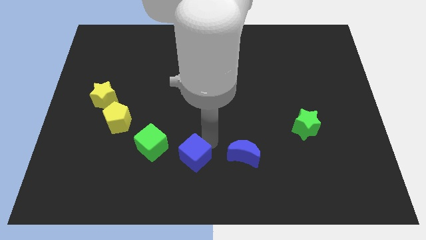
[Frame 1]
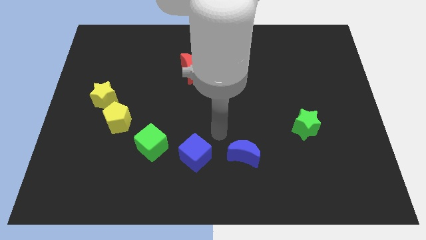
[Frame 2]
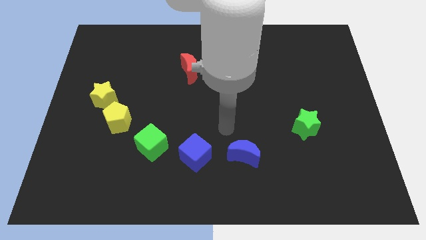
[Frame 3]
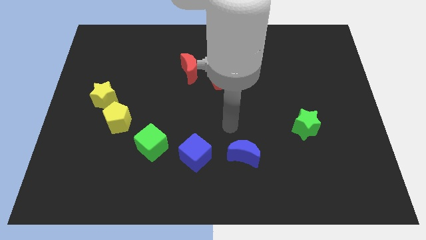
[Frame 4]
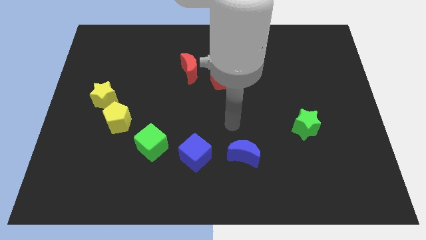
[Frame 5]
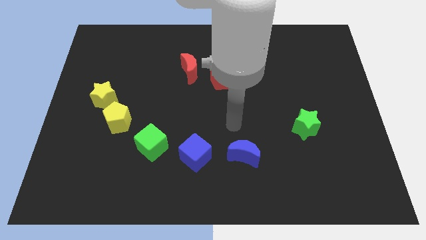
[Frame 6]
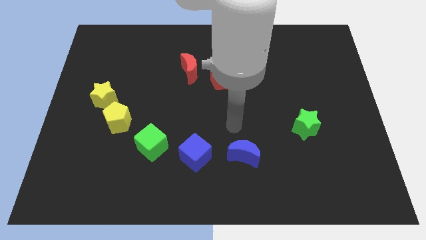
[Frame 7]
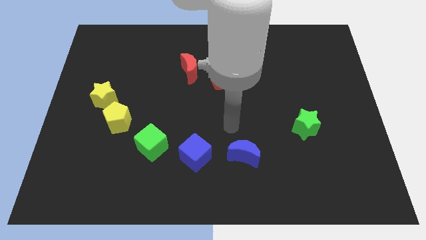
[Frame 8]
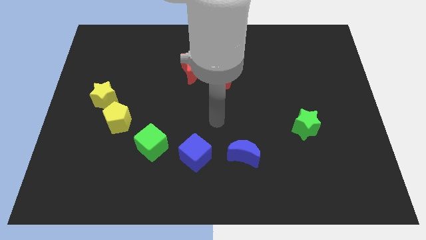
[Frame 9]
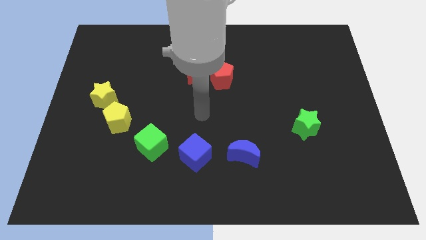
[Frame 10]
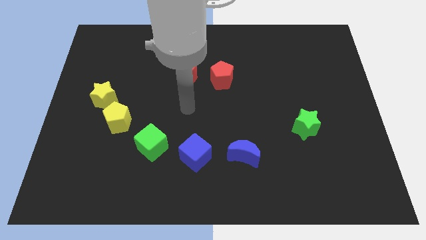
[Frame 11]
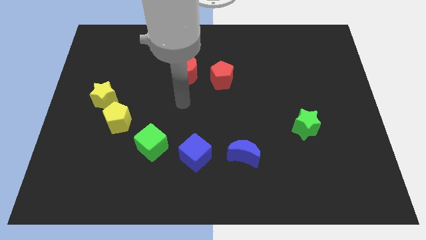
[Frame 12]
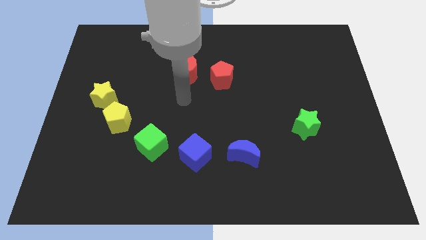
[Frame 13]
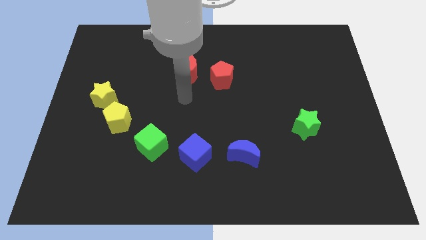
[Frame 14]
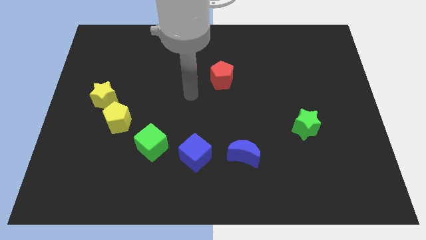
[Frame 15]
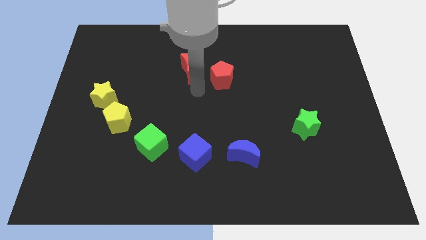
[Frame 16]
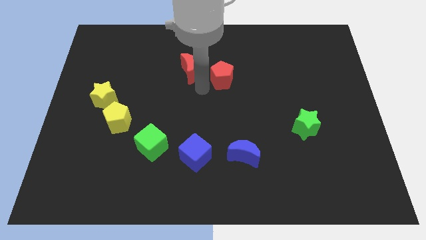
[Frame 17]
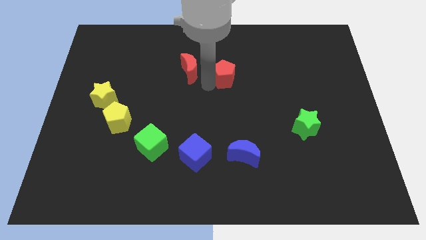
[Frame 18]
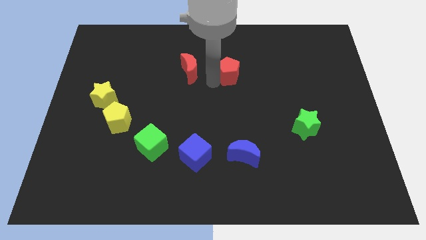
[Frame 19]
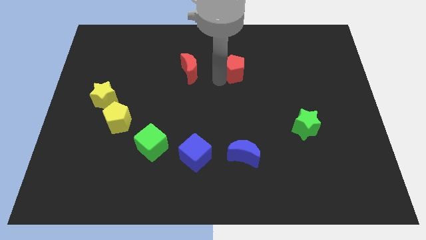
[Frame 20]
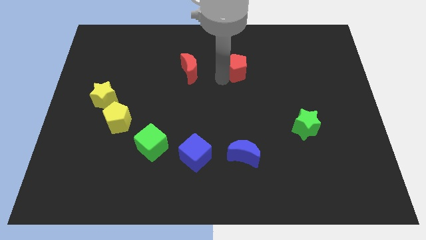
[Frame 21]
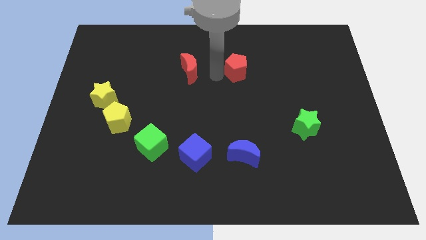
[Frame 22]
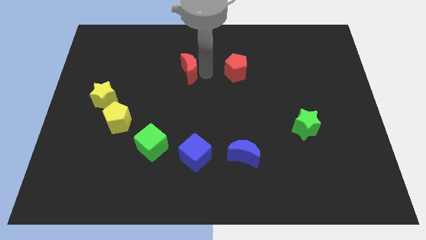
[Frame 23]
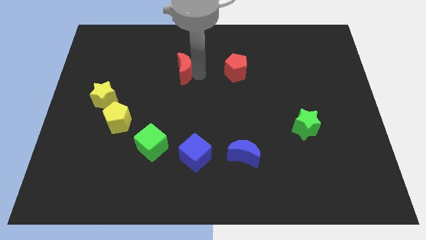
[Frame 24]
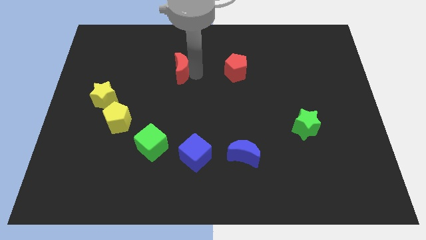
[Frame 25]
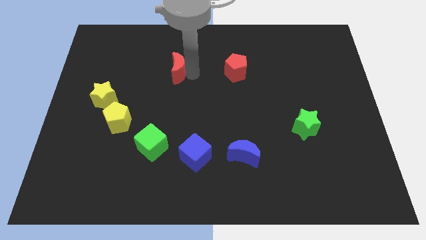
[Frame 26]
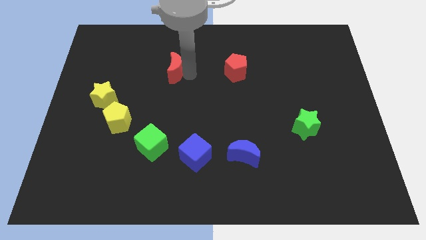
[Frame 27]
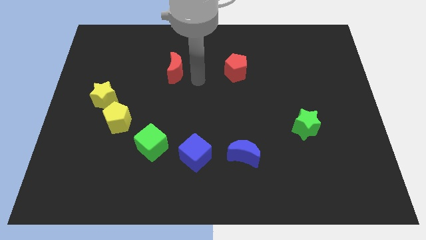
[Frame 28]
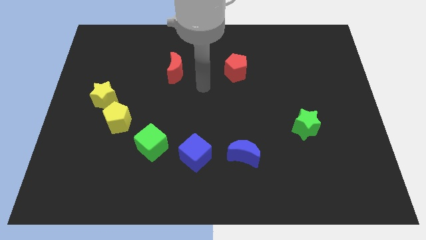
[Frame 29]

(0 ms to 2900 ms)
move red moon slightly towards left

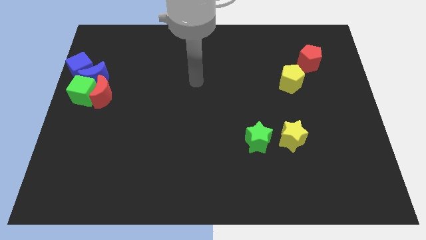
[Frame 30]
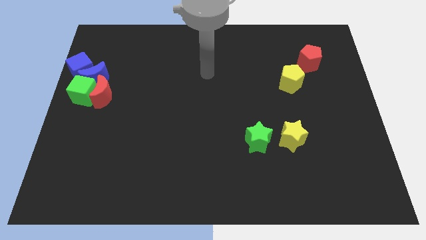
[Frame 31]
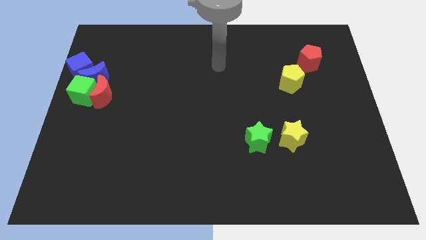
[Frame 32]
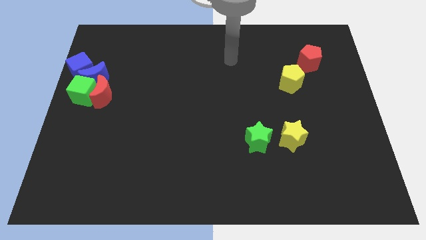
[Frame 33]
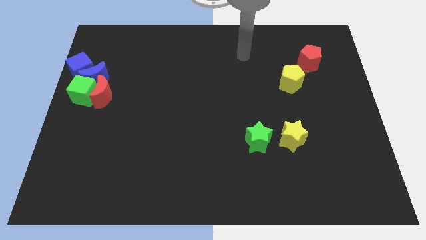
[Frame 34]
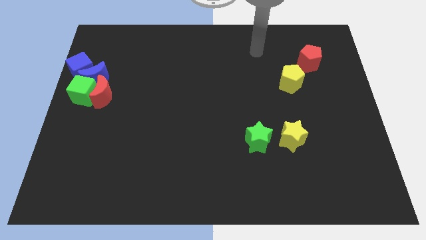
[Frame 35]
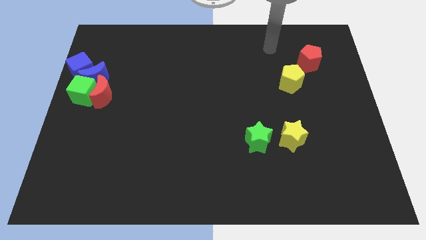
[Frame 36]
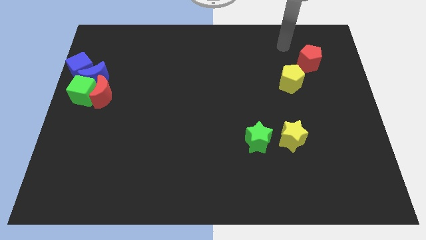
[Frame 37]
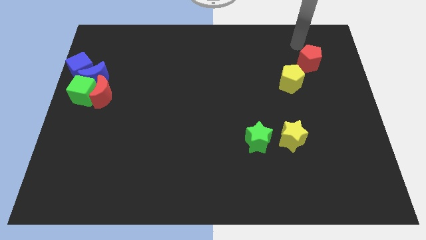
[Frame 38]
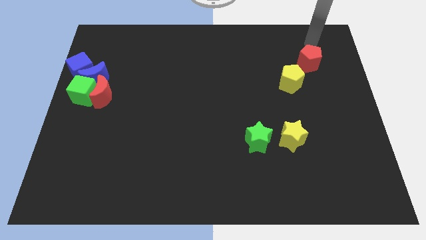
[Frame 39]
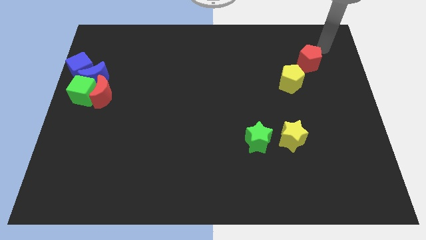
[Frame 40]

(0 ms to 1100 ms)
move the arm towards the red pentagon

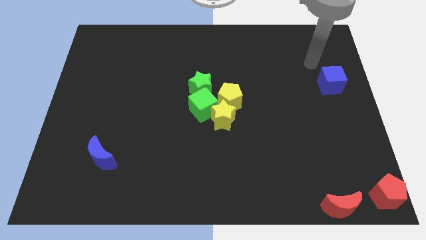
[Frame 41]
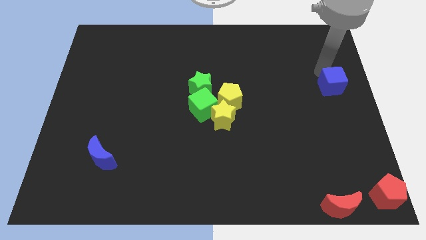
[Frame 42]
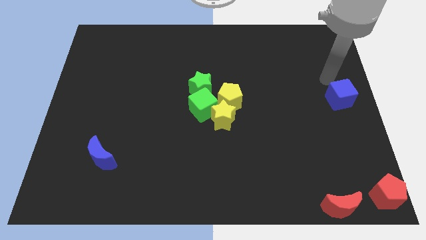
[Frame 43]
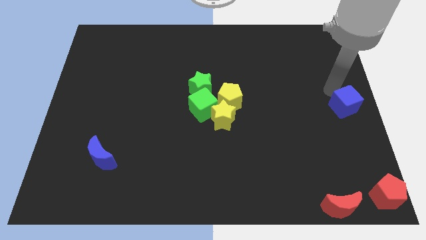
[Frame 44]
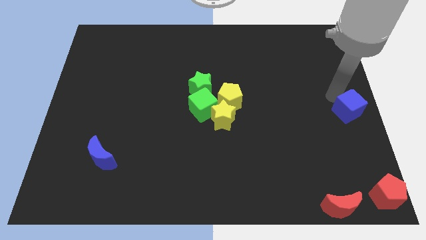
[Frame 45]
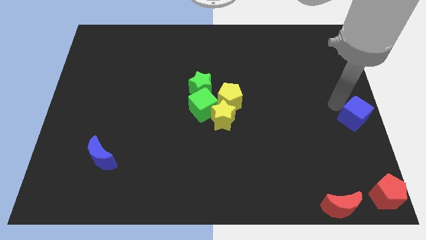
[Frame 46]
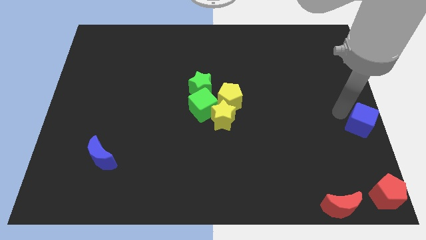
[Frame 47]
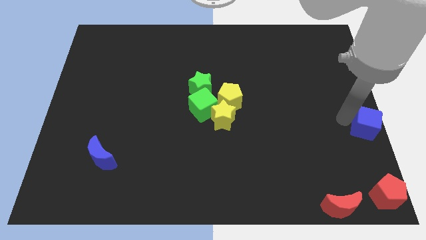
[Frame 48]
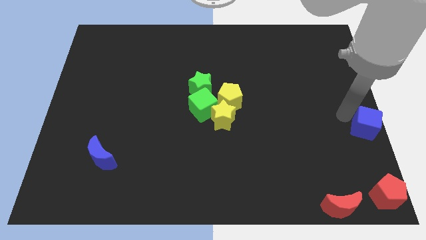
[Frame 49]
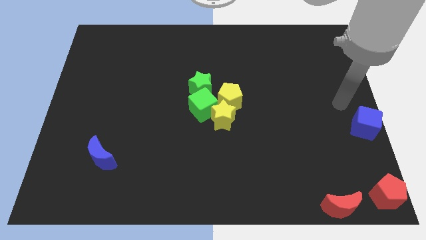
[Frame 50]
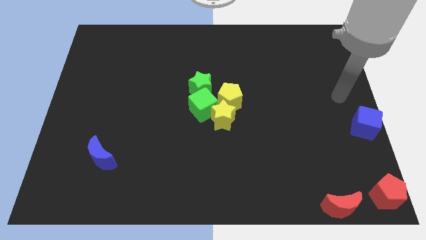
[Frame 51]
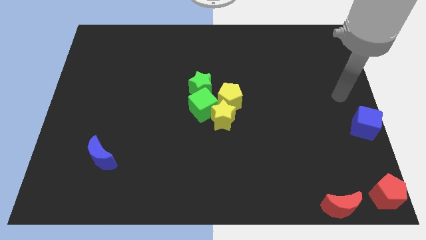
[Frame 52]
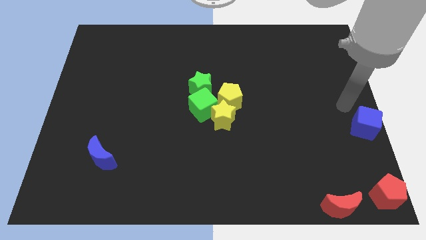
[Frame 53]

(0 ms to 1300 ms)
push the blue block to the right center of the board

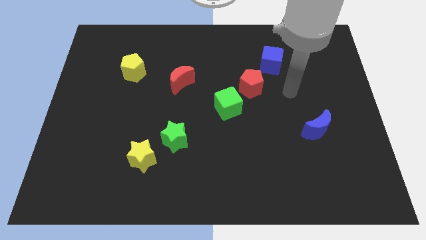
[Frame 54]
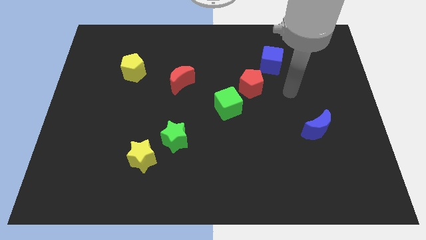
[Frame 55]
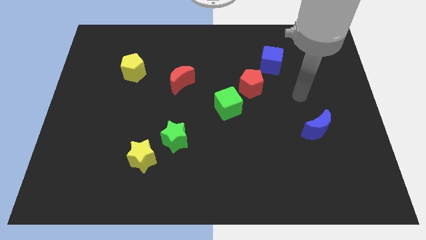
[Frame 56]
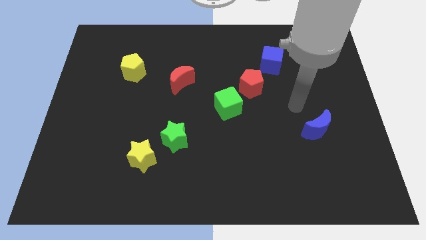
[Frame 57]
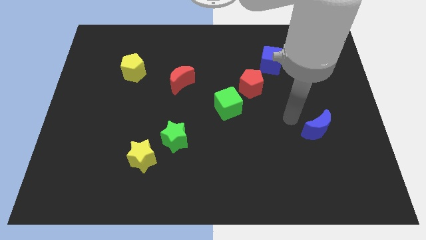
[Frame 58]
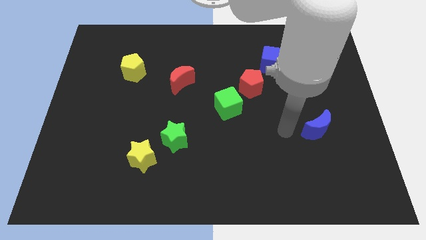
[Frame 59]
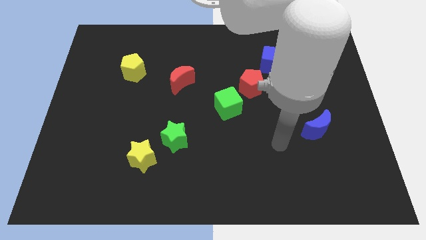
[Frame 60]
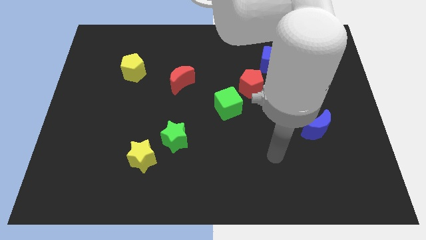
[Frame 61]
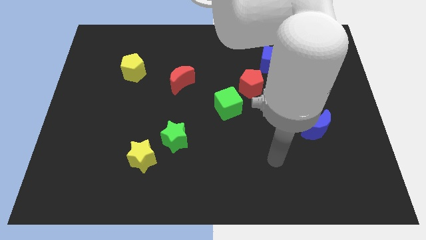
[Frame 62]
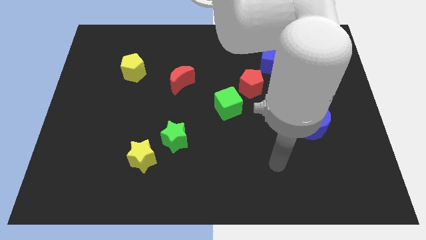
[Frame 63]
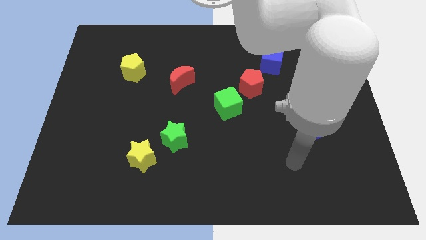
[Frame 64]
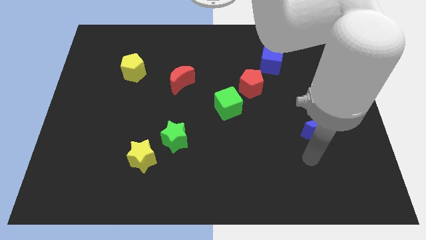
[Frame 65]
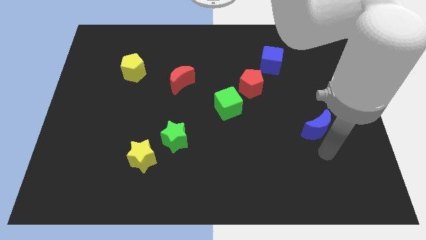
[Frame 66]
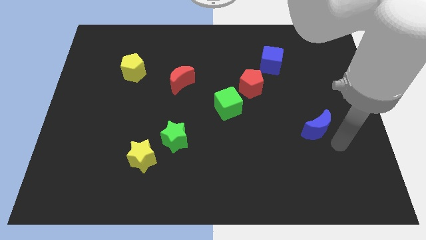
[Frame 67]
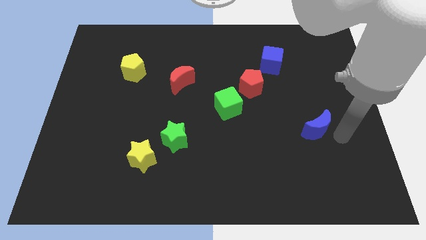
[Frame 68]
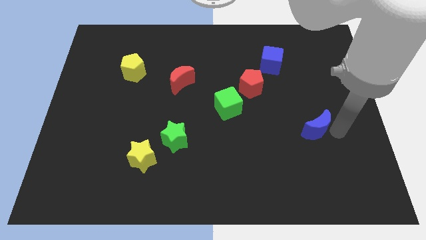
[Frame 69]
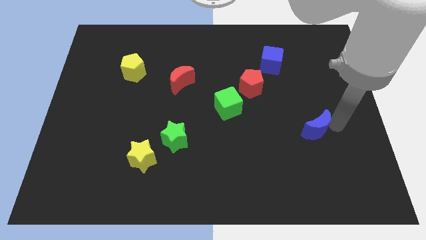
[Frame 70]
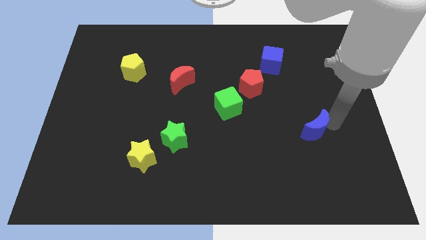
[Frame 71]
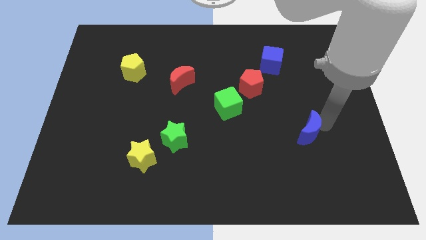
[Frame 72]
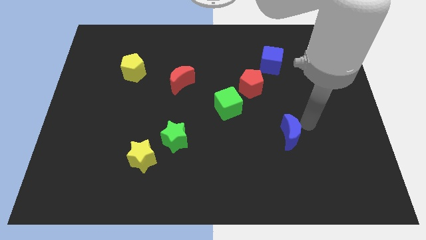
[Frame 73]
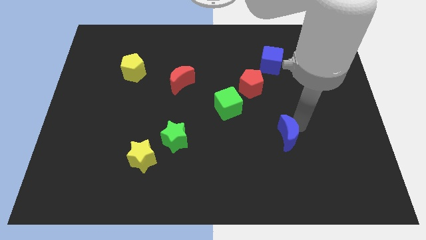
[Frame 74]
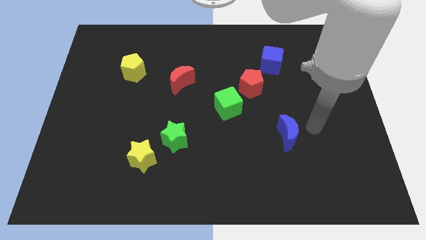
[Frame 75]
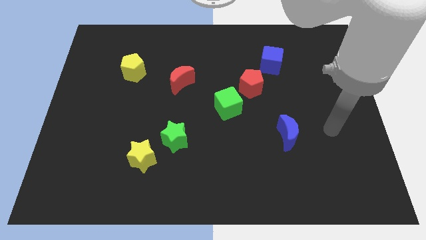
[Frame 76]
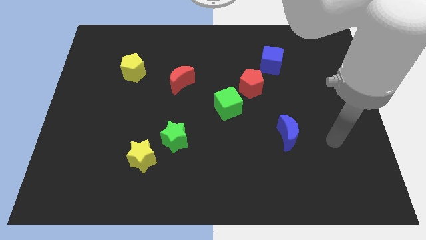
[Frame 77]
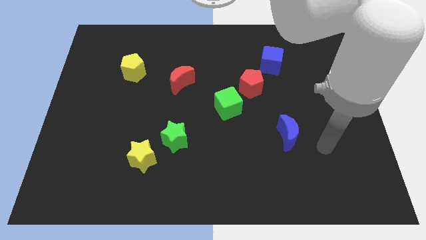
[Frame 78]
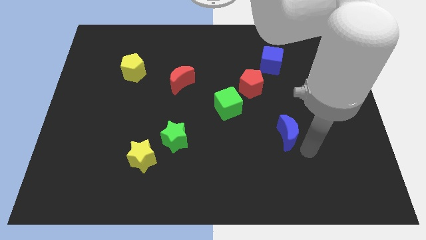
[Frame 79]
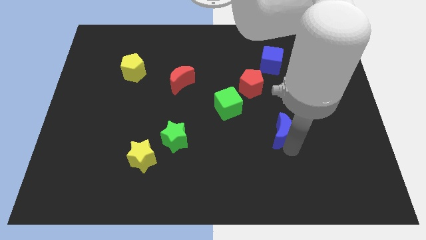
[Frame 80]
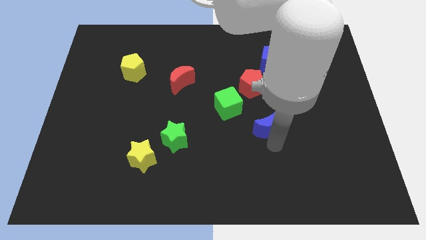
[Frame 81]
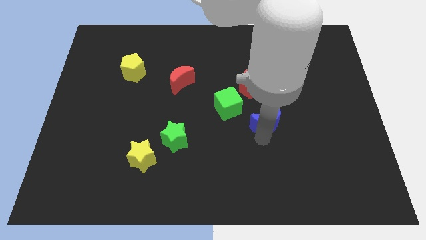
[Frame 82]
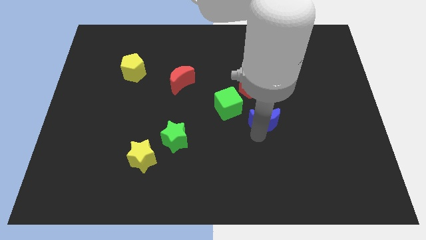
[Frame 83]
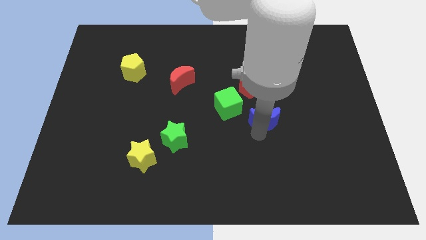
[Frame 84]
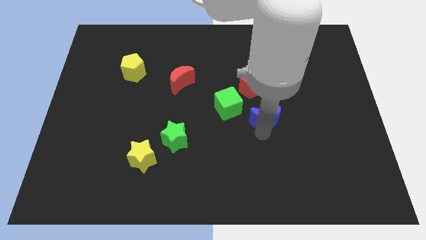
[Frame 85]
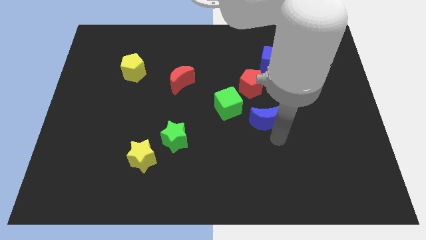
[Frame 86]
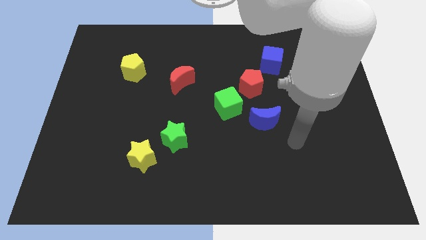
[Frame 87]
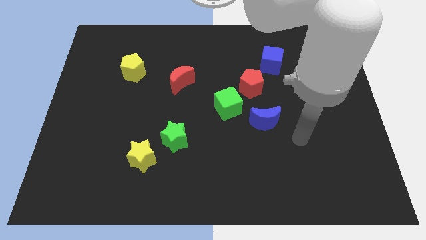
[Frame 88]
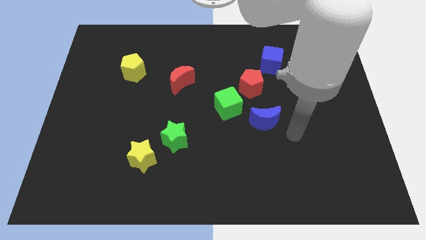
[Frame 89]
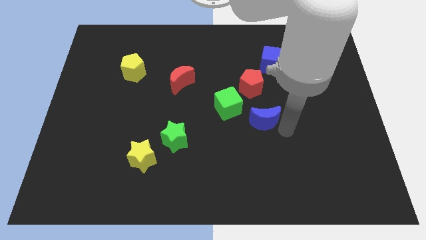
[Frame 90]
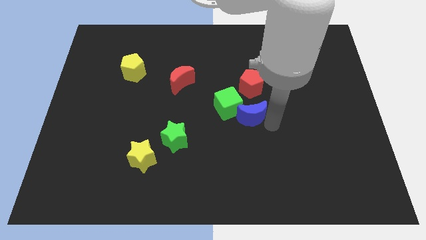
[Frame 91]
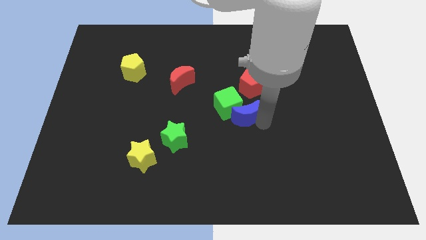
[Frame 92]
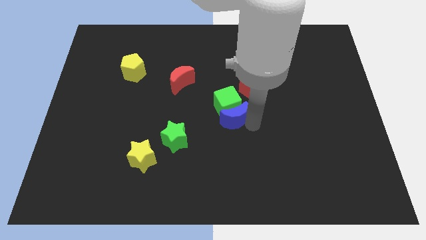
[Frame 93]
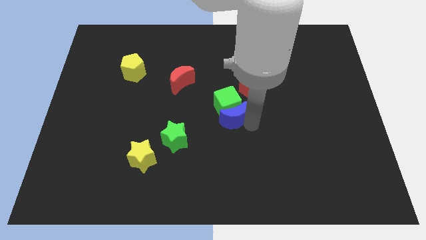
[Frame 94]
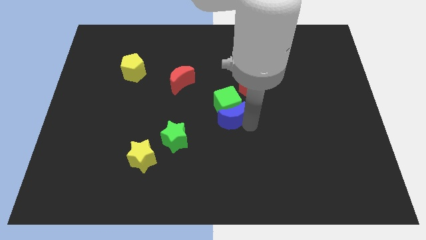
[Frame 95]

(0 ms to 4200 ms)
place the blue crescent below the green cube
